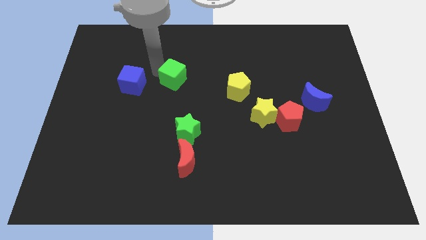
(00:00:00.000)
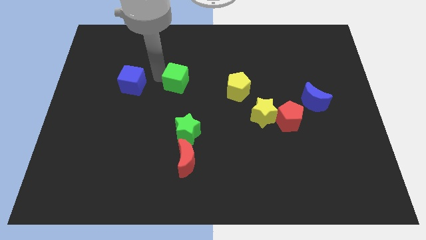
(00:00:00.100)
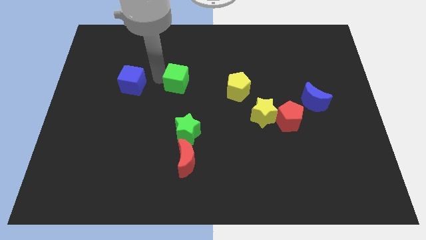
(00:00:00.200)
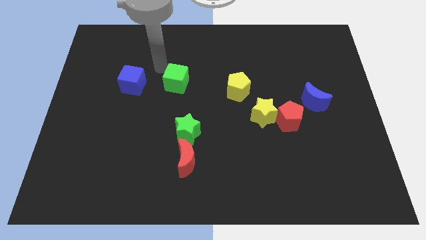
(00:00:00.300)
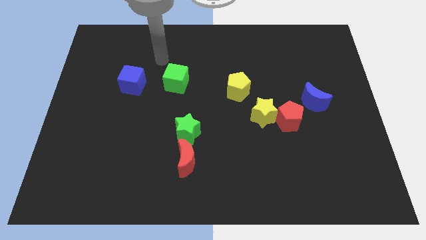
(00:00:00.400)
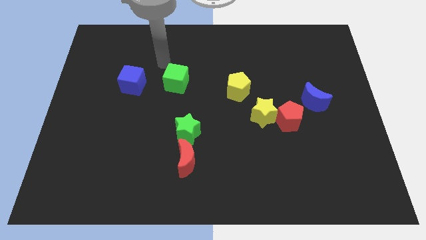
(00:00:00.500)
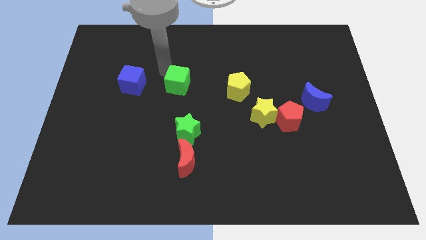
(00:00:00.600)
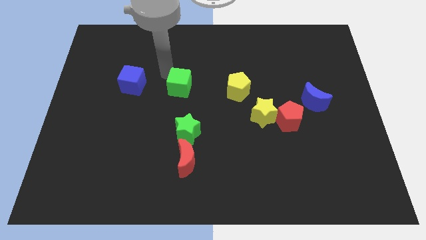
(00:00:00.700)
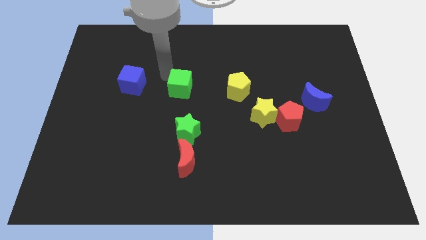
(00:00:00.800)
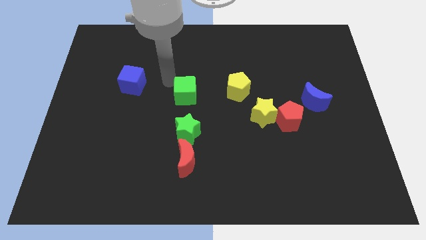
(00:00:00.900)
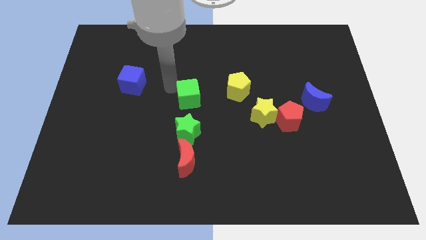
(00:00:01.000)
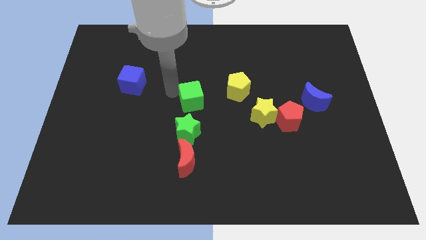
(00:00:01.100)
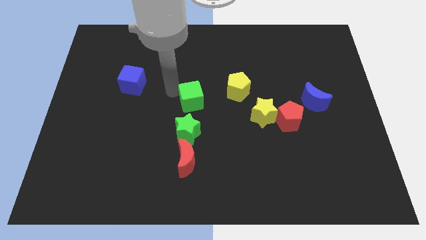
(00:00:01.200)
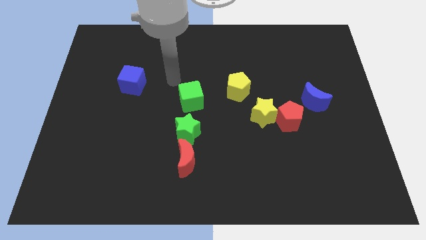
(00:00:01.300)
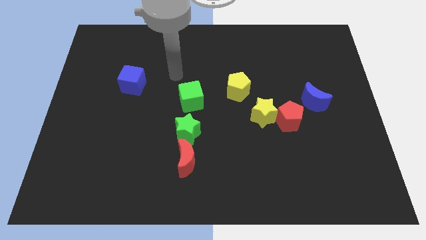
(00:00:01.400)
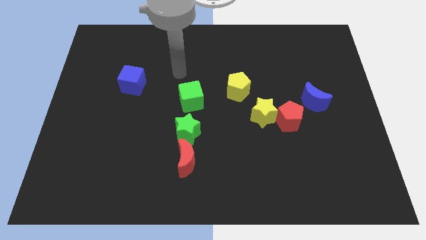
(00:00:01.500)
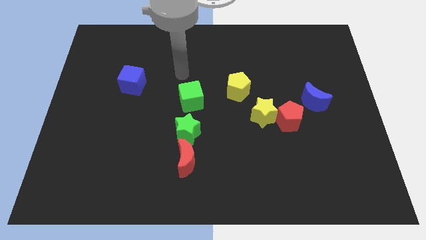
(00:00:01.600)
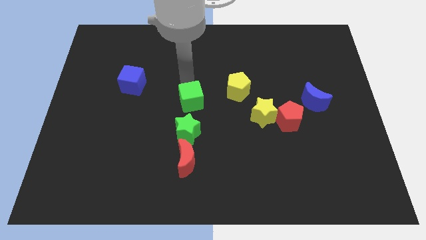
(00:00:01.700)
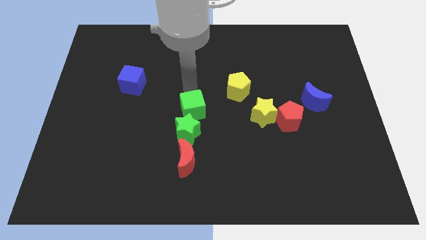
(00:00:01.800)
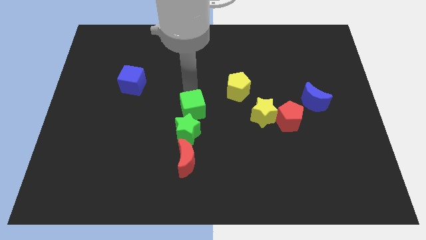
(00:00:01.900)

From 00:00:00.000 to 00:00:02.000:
place green cube above green star

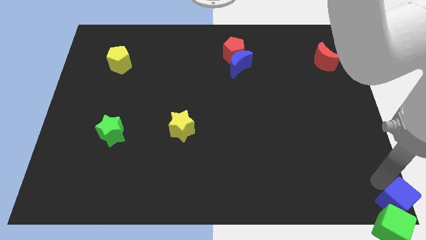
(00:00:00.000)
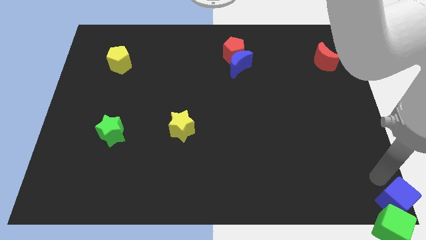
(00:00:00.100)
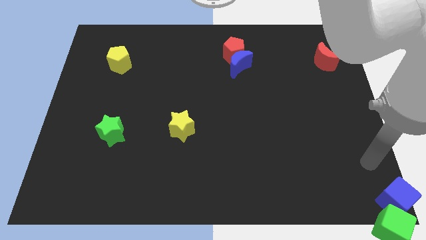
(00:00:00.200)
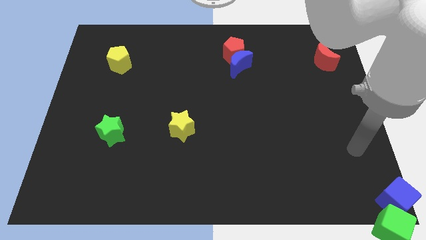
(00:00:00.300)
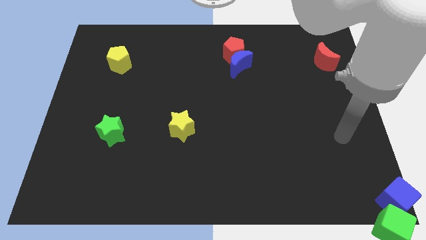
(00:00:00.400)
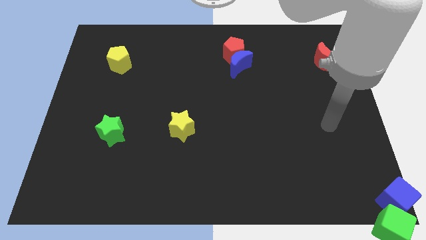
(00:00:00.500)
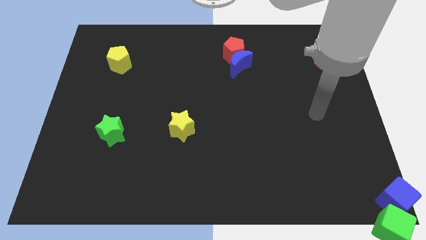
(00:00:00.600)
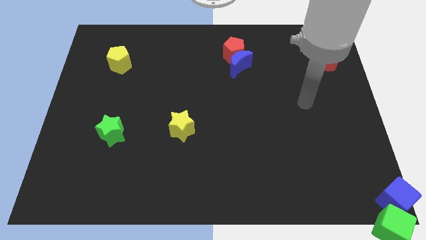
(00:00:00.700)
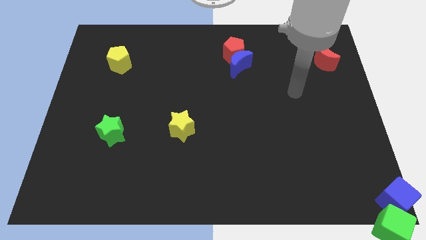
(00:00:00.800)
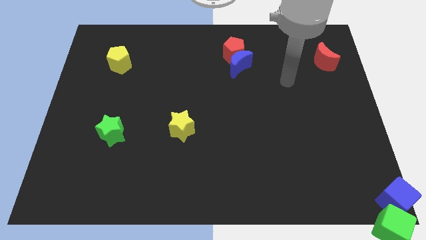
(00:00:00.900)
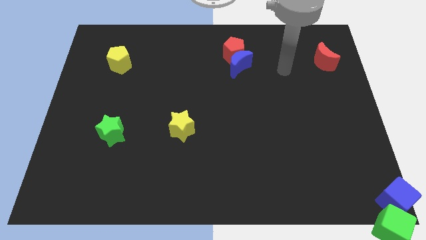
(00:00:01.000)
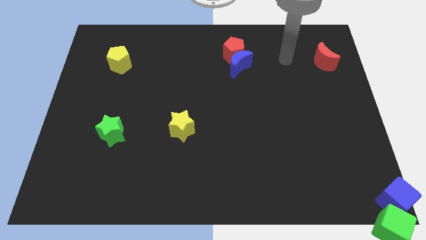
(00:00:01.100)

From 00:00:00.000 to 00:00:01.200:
go away from the blue cube

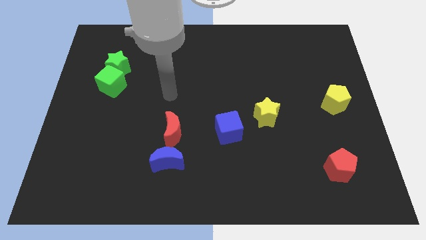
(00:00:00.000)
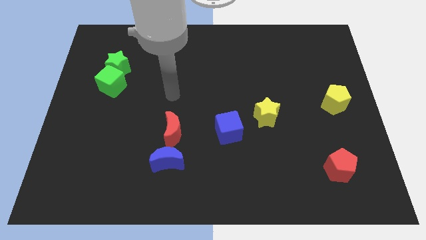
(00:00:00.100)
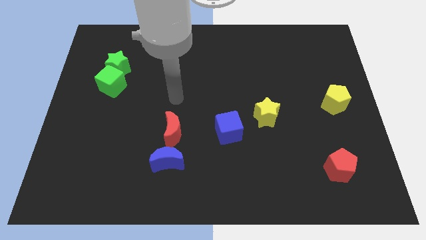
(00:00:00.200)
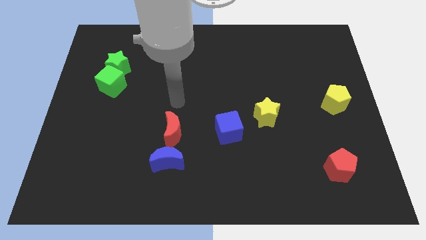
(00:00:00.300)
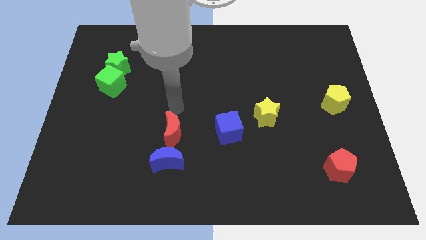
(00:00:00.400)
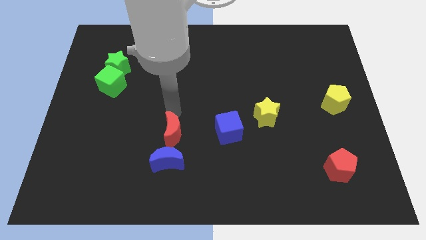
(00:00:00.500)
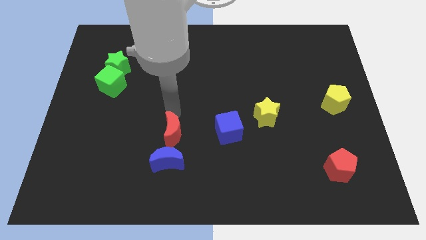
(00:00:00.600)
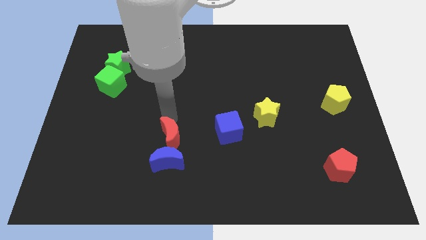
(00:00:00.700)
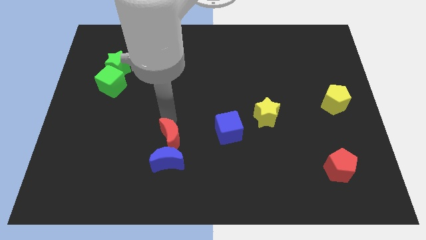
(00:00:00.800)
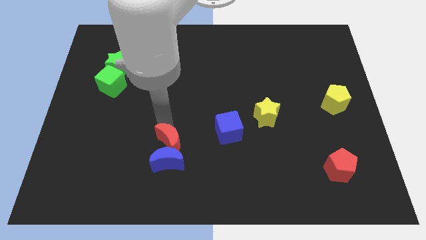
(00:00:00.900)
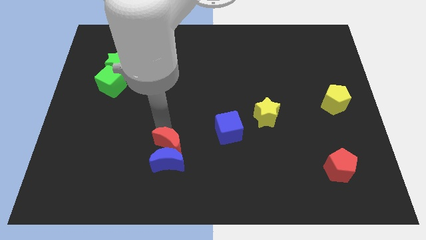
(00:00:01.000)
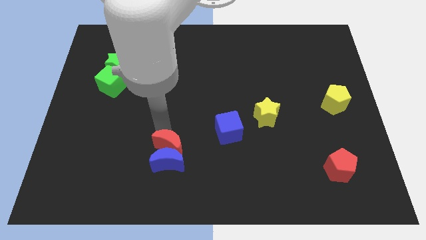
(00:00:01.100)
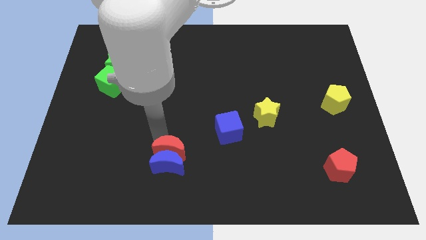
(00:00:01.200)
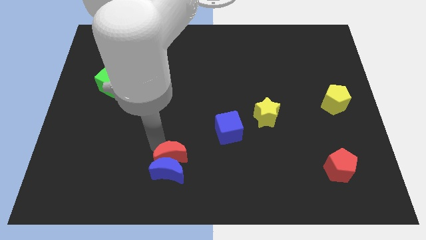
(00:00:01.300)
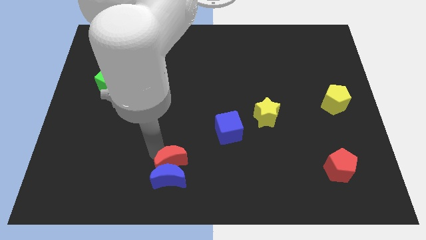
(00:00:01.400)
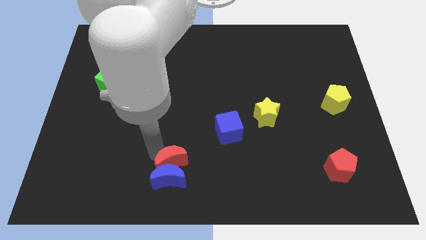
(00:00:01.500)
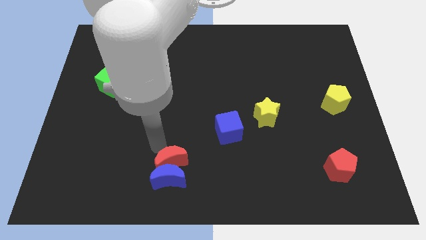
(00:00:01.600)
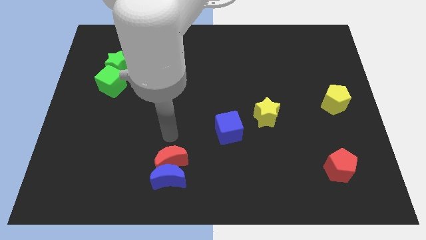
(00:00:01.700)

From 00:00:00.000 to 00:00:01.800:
move the red moon into the blue moon

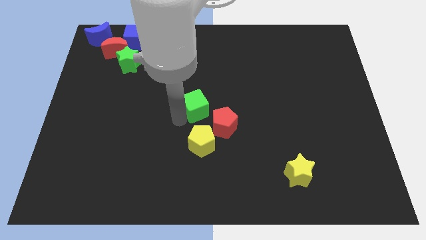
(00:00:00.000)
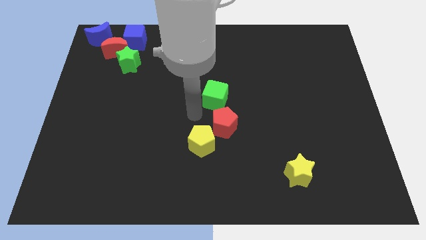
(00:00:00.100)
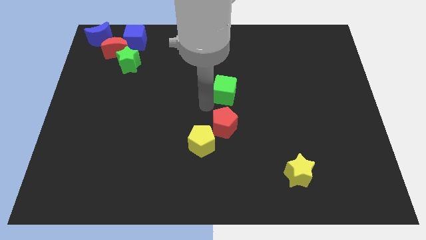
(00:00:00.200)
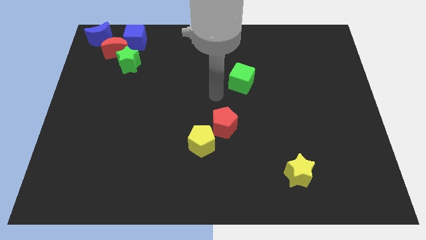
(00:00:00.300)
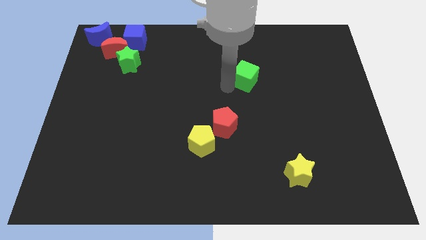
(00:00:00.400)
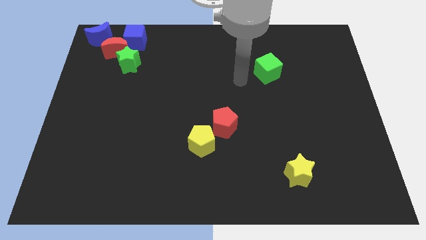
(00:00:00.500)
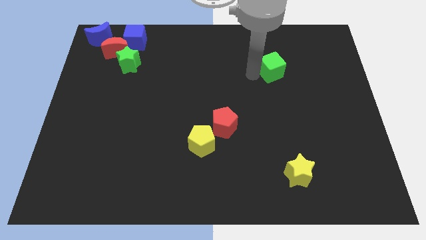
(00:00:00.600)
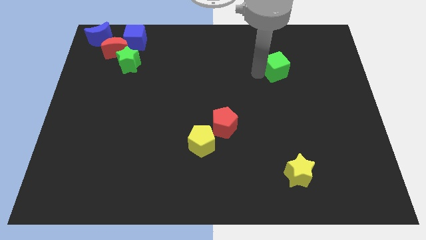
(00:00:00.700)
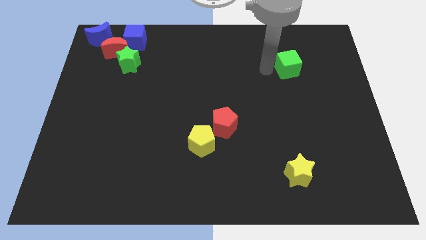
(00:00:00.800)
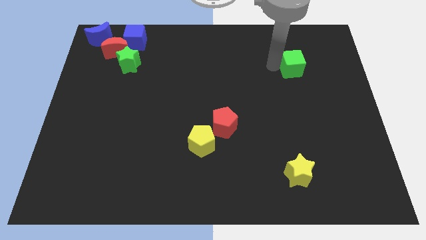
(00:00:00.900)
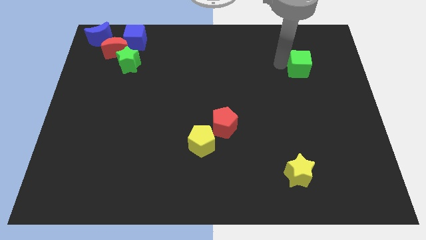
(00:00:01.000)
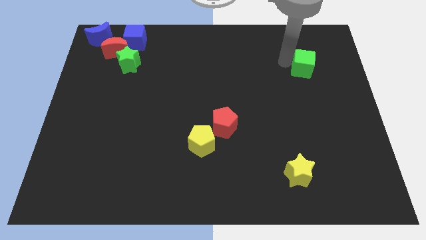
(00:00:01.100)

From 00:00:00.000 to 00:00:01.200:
place green cube above yellow star

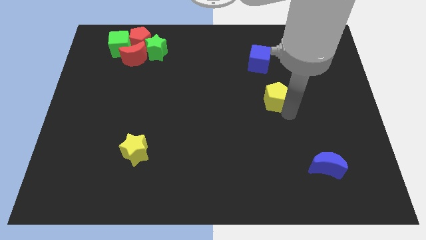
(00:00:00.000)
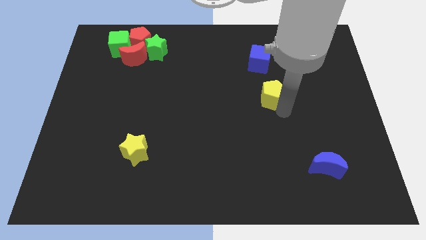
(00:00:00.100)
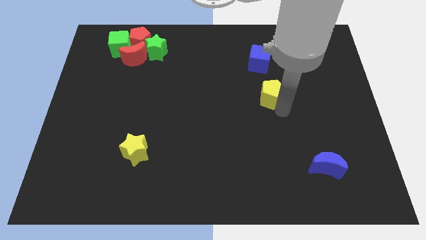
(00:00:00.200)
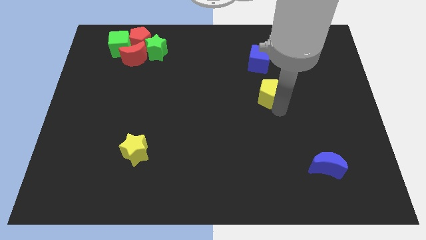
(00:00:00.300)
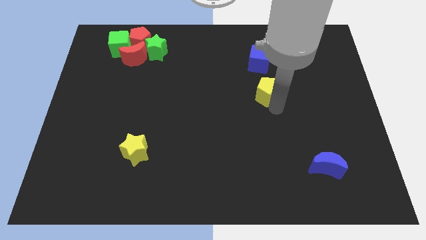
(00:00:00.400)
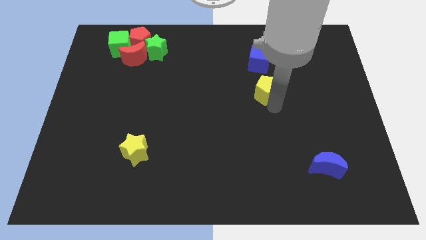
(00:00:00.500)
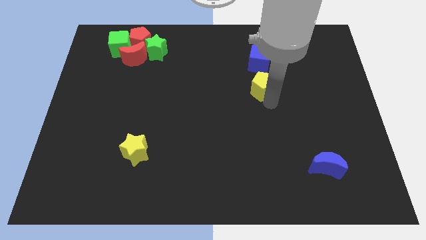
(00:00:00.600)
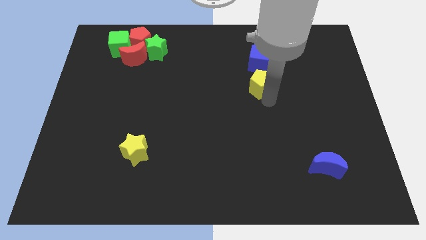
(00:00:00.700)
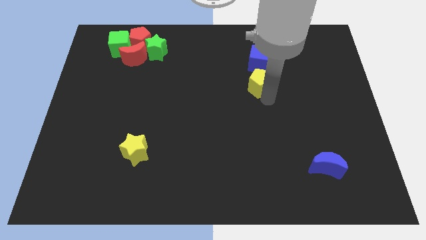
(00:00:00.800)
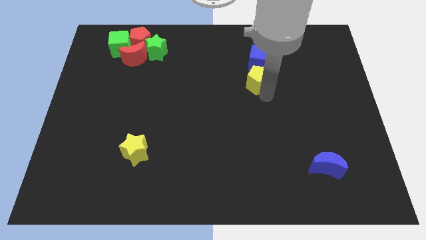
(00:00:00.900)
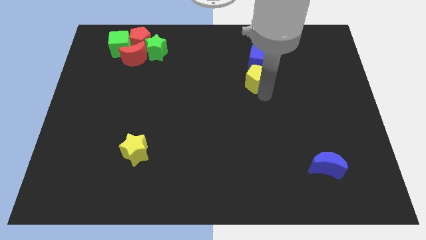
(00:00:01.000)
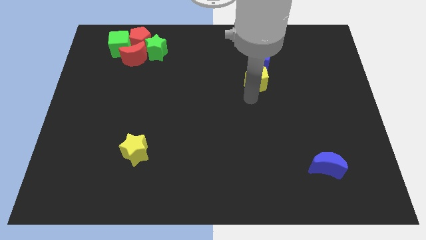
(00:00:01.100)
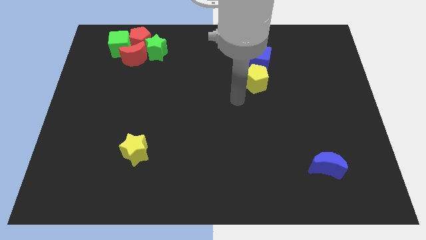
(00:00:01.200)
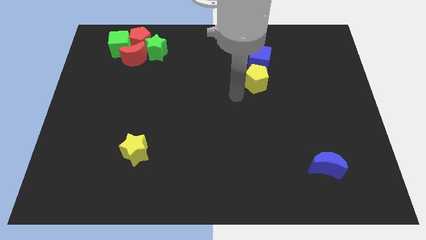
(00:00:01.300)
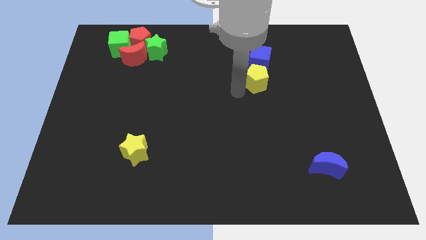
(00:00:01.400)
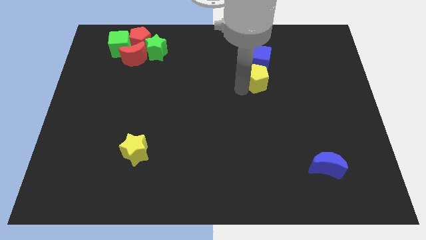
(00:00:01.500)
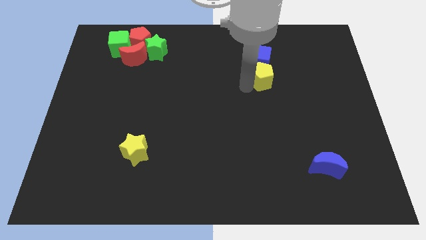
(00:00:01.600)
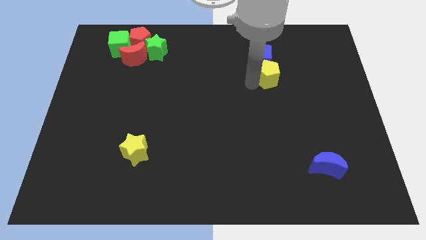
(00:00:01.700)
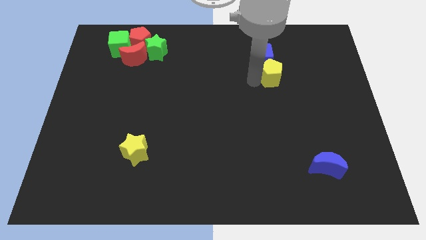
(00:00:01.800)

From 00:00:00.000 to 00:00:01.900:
push the yellow pentagon into the blue cube

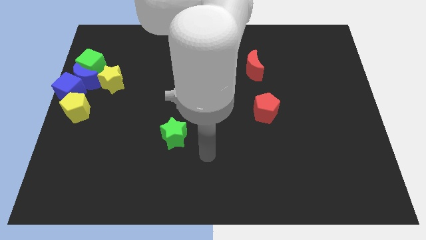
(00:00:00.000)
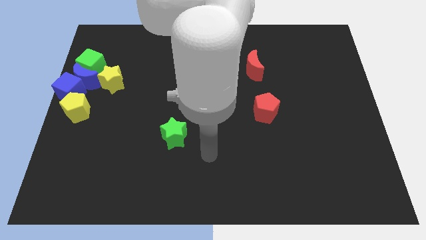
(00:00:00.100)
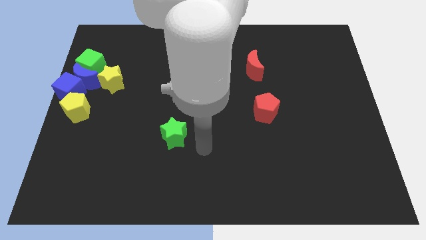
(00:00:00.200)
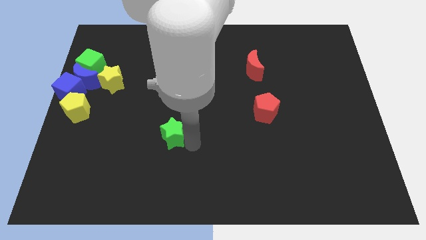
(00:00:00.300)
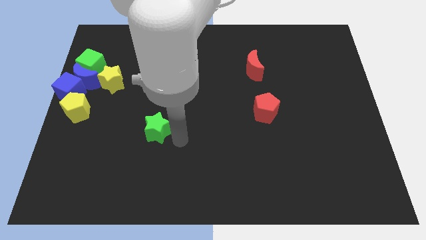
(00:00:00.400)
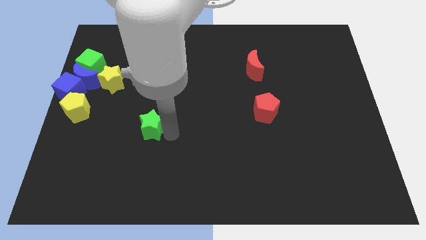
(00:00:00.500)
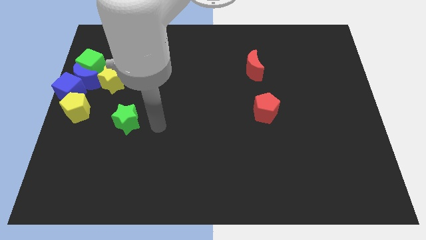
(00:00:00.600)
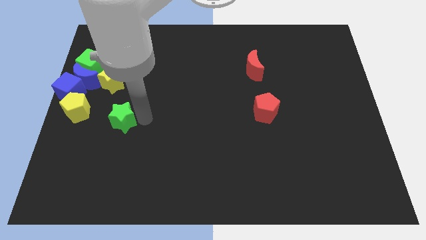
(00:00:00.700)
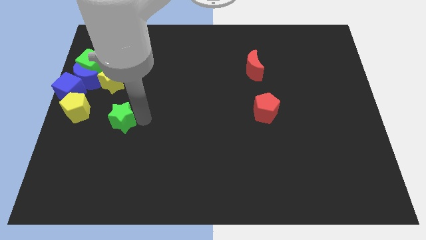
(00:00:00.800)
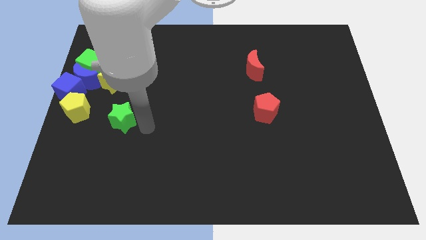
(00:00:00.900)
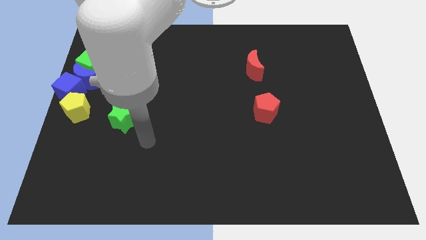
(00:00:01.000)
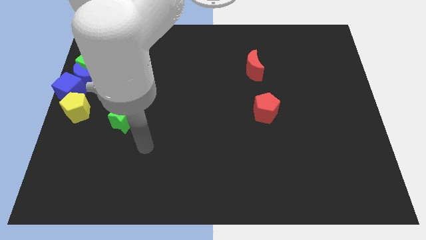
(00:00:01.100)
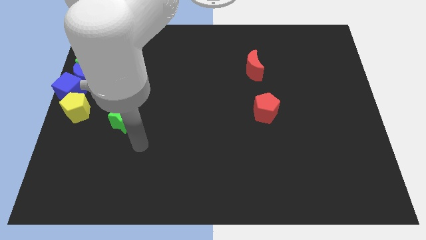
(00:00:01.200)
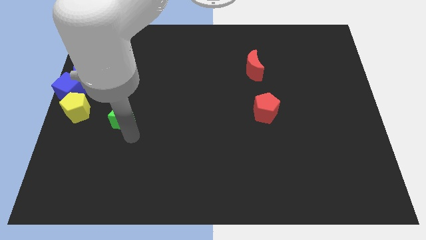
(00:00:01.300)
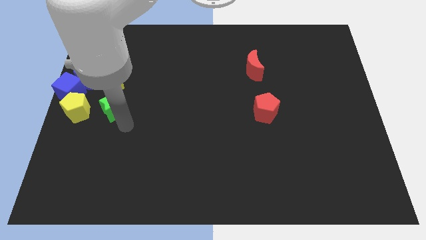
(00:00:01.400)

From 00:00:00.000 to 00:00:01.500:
move the green star parallel right to the yellow pentagon
